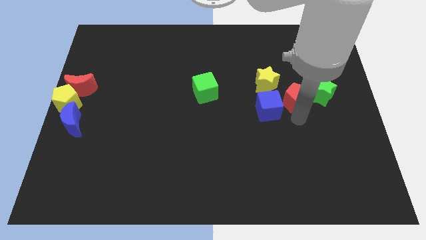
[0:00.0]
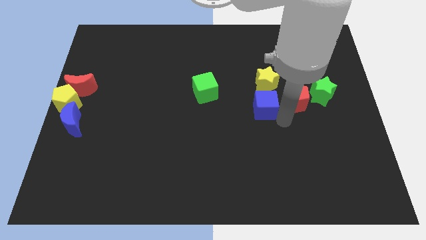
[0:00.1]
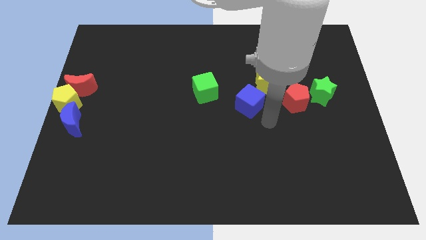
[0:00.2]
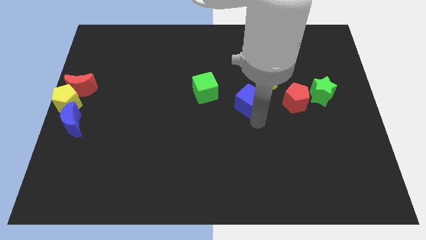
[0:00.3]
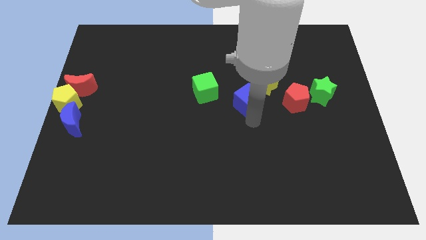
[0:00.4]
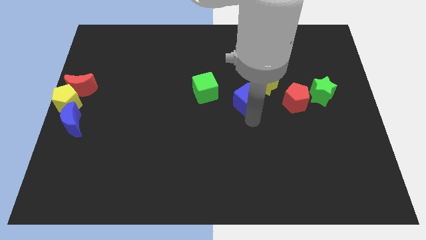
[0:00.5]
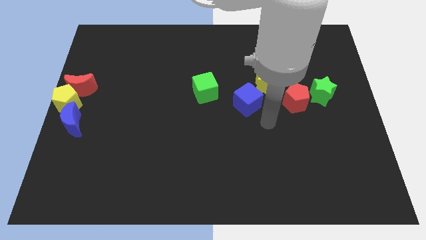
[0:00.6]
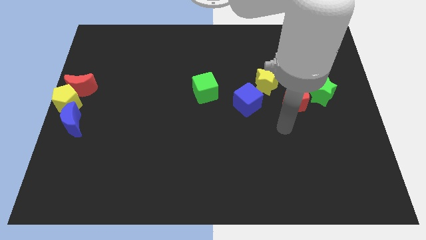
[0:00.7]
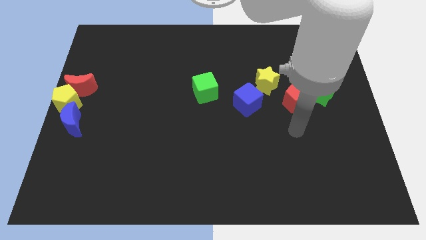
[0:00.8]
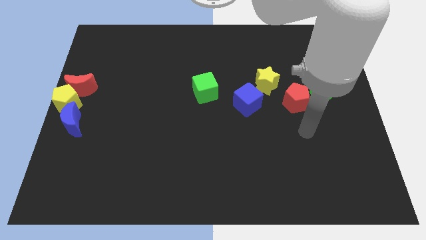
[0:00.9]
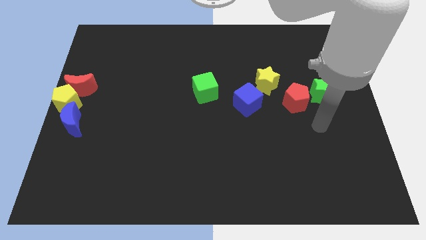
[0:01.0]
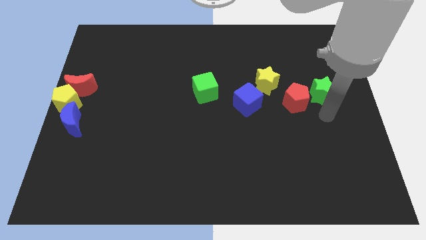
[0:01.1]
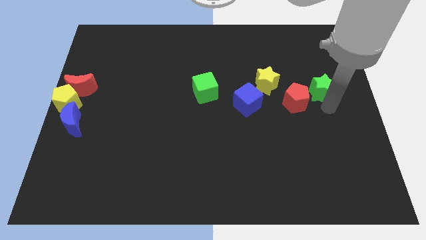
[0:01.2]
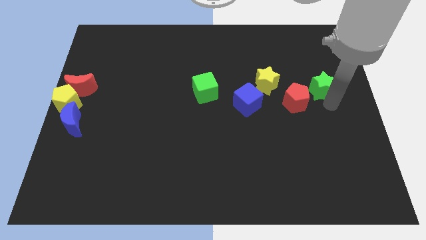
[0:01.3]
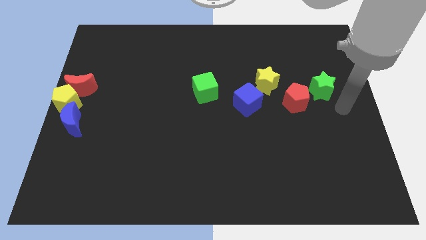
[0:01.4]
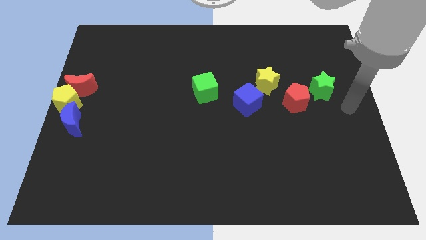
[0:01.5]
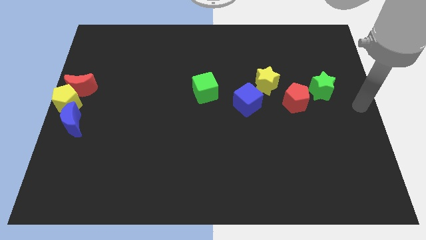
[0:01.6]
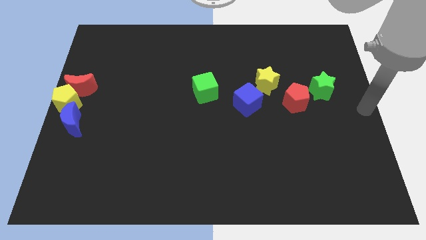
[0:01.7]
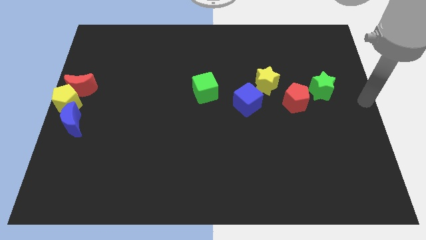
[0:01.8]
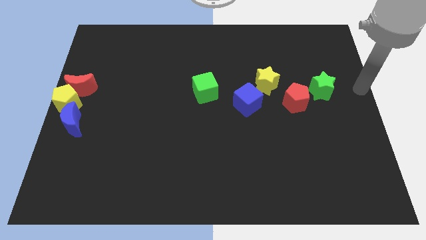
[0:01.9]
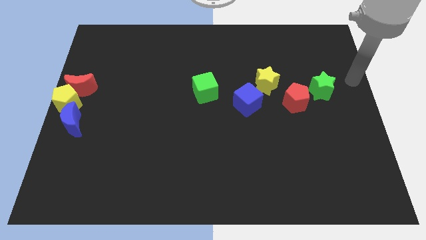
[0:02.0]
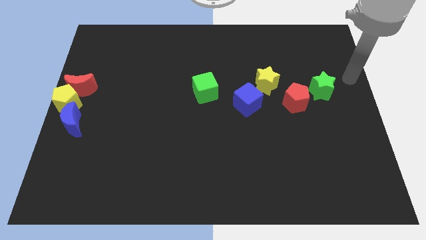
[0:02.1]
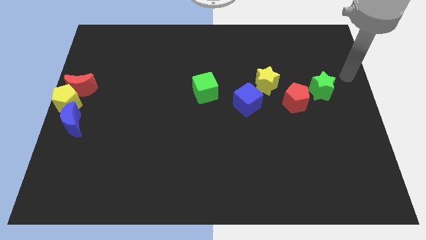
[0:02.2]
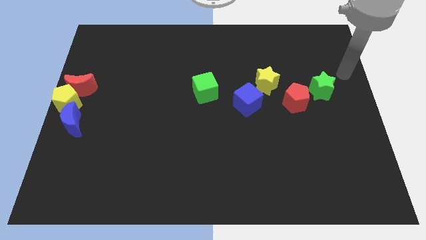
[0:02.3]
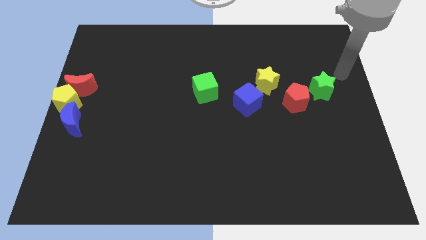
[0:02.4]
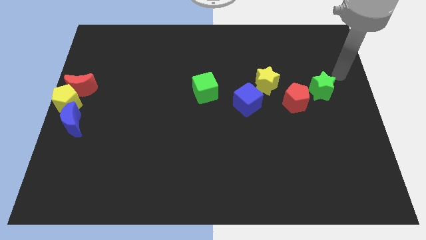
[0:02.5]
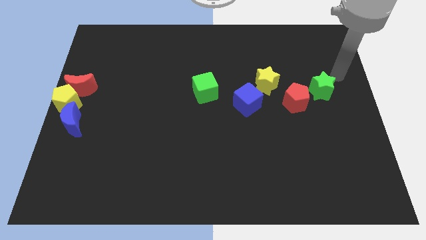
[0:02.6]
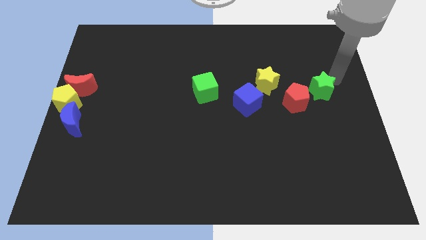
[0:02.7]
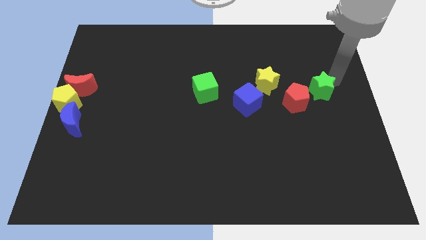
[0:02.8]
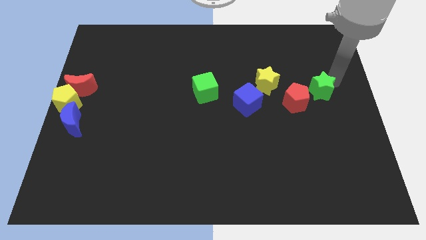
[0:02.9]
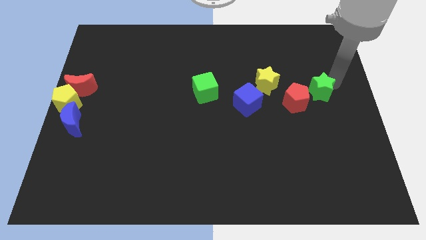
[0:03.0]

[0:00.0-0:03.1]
tap the green star

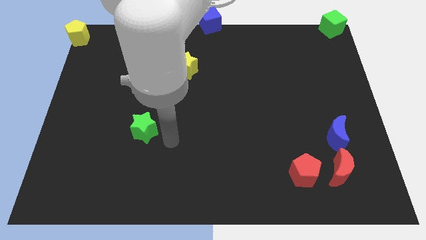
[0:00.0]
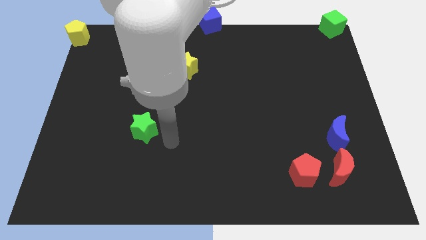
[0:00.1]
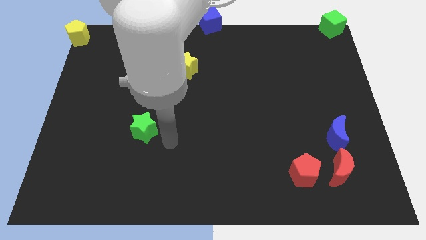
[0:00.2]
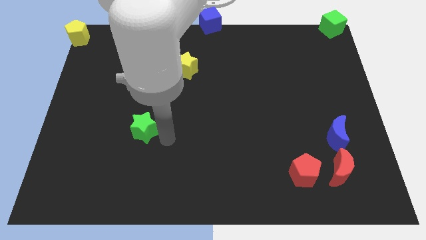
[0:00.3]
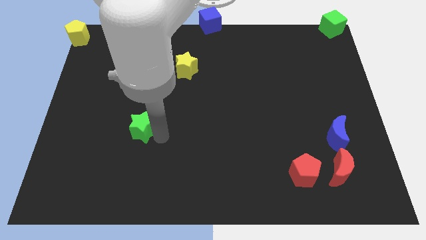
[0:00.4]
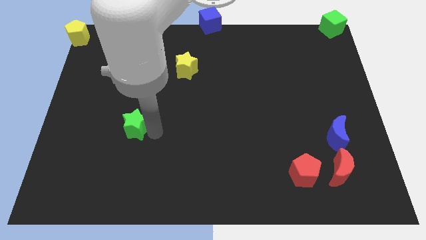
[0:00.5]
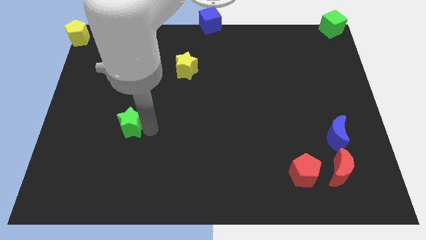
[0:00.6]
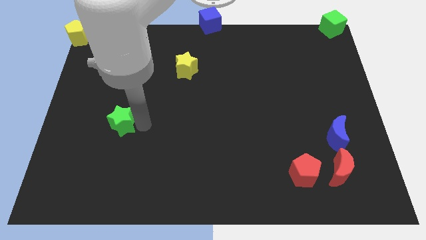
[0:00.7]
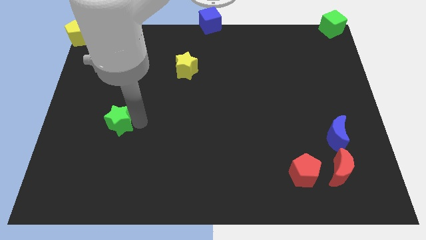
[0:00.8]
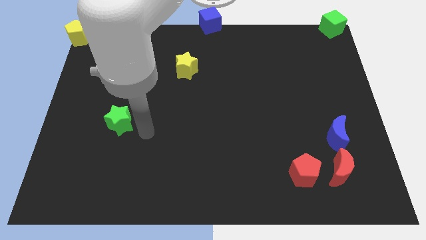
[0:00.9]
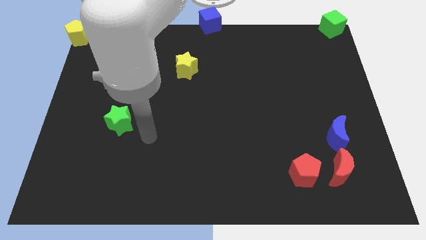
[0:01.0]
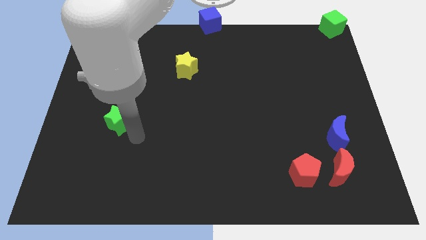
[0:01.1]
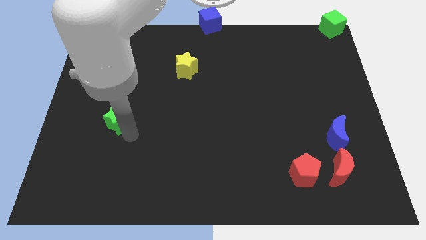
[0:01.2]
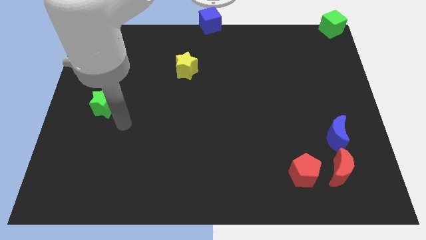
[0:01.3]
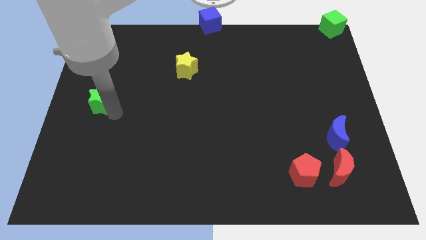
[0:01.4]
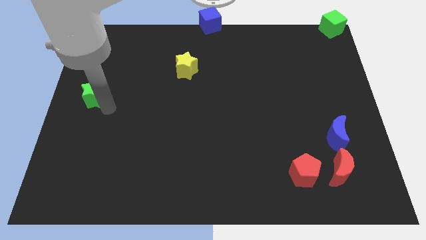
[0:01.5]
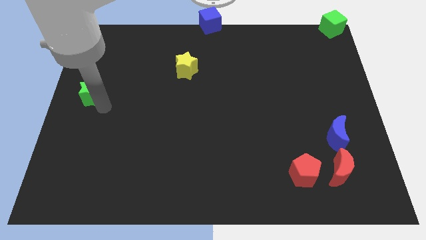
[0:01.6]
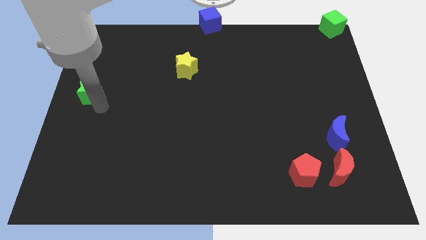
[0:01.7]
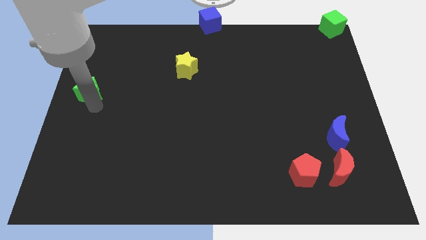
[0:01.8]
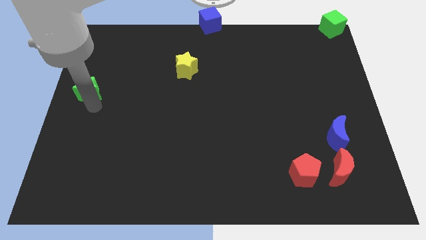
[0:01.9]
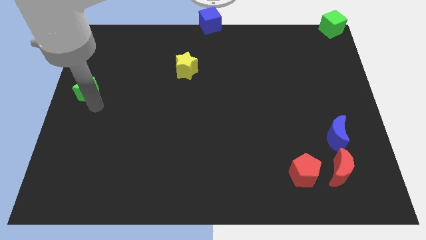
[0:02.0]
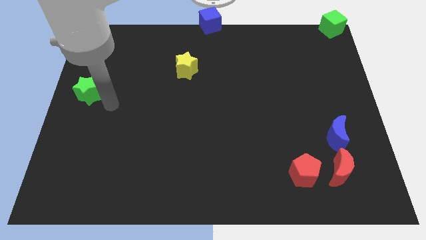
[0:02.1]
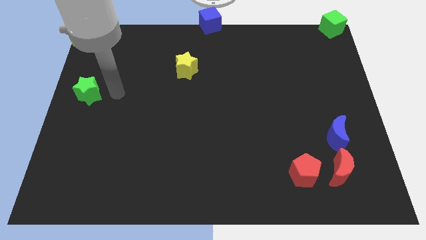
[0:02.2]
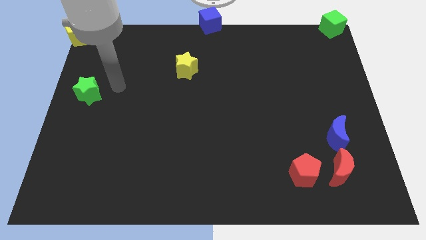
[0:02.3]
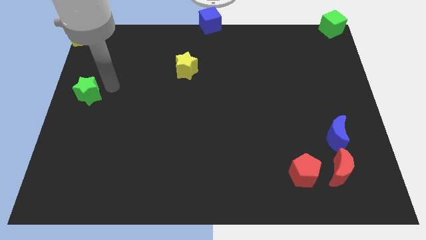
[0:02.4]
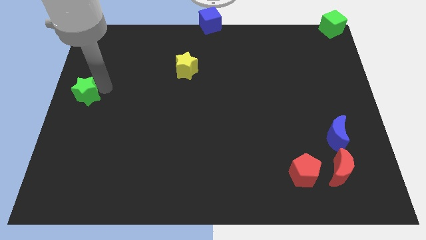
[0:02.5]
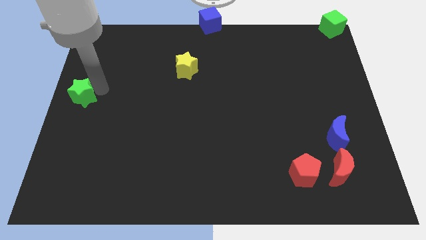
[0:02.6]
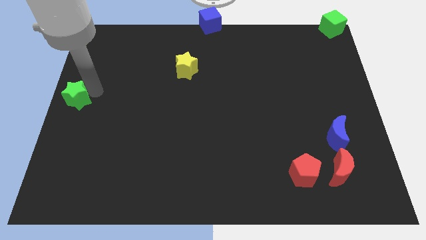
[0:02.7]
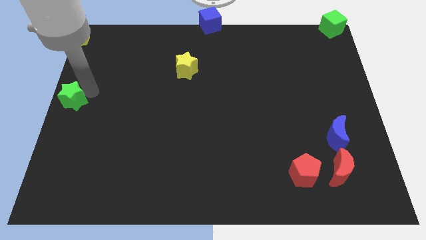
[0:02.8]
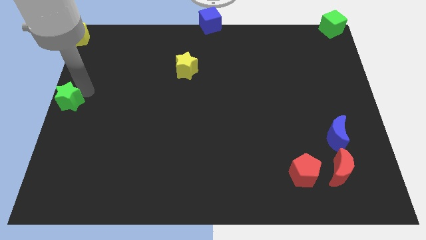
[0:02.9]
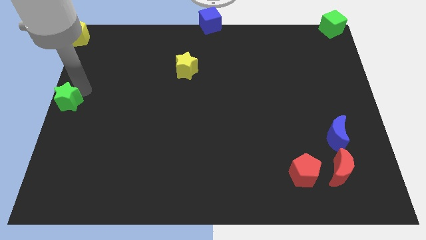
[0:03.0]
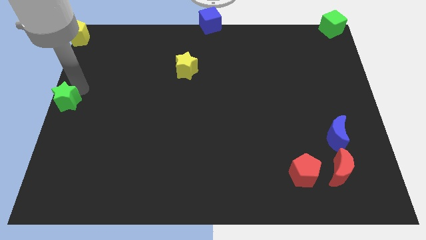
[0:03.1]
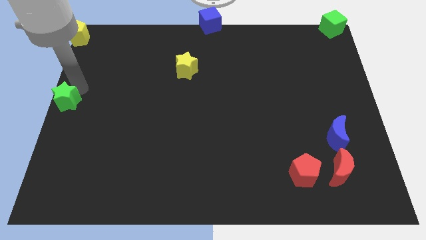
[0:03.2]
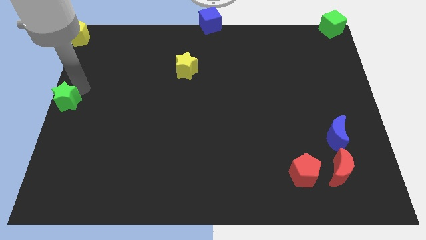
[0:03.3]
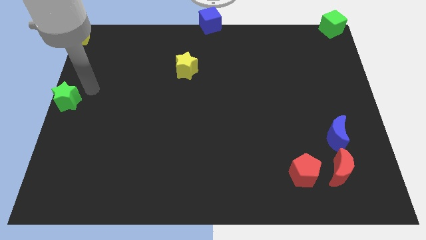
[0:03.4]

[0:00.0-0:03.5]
place green star to the left center of the board

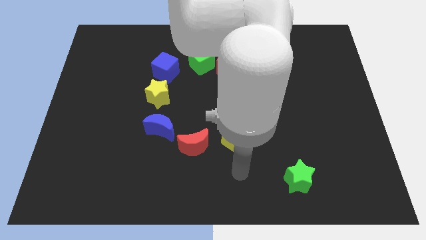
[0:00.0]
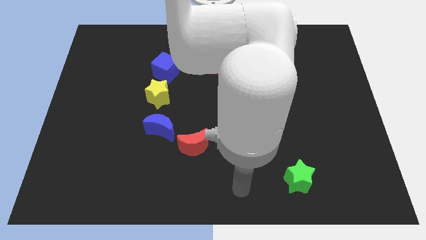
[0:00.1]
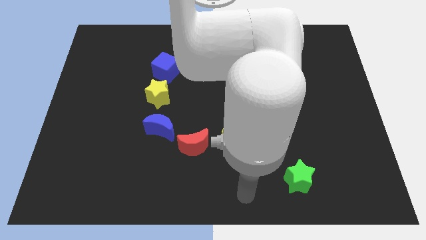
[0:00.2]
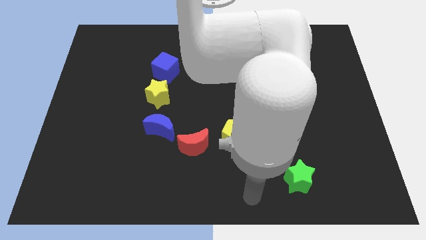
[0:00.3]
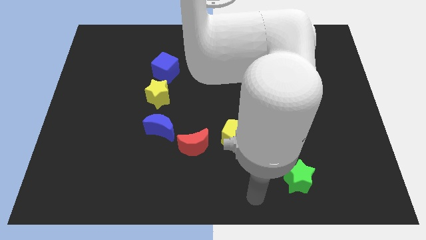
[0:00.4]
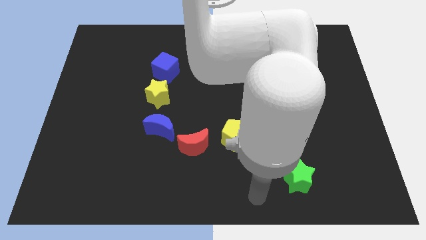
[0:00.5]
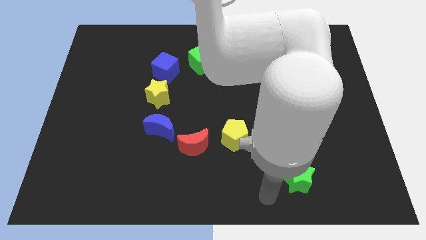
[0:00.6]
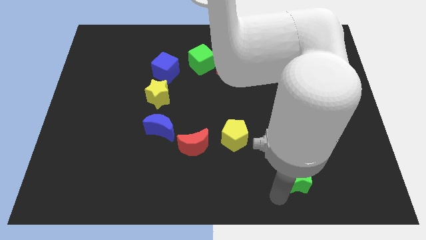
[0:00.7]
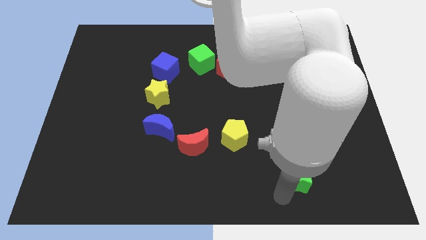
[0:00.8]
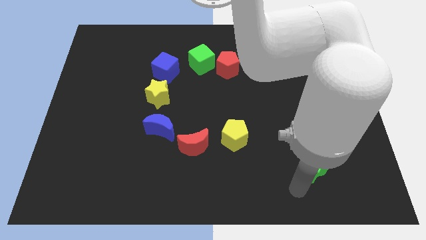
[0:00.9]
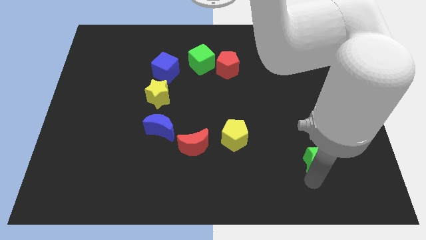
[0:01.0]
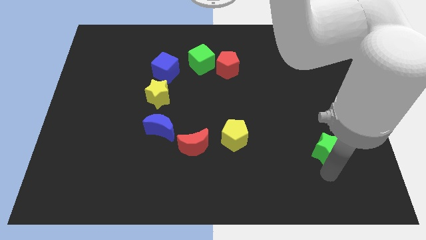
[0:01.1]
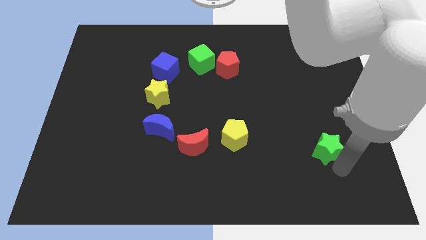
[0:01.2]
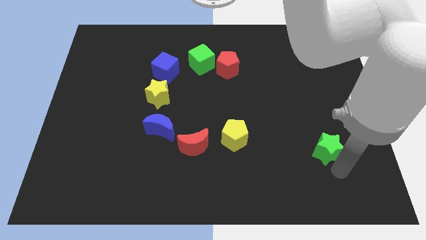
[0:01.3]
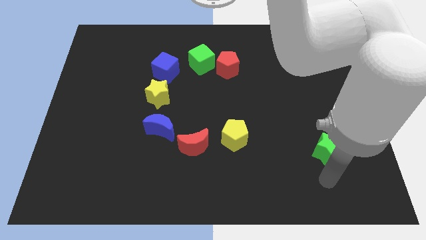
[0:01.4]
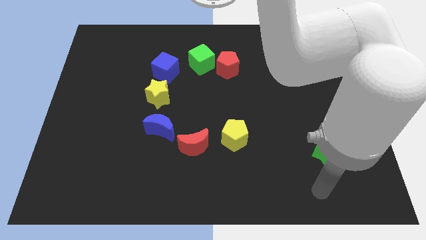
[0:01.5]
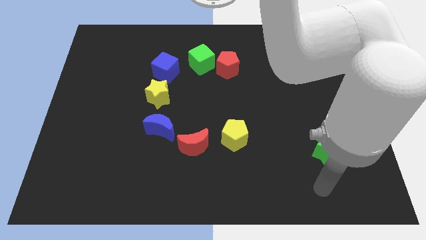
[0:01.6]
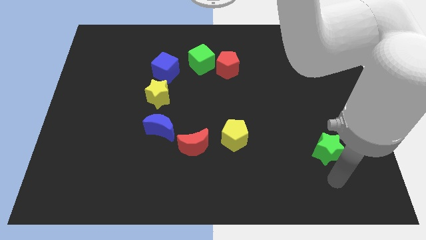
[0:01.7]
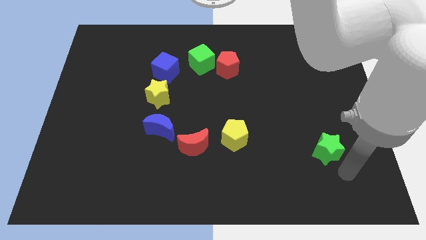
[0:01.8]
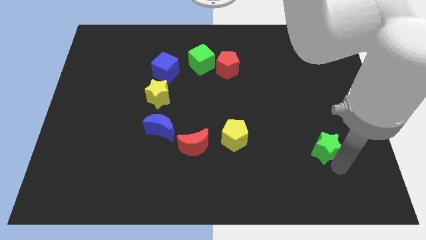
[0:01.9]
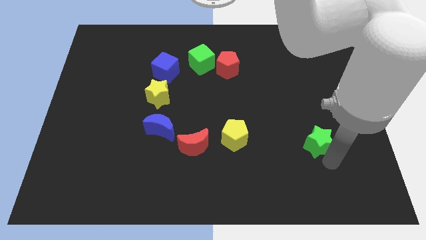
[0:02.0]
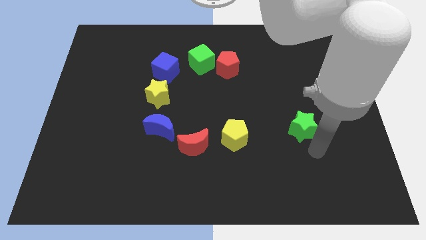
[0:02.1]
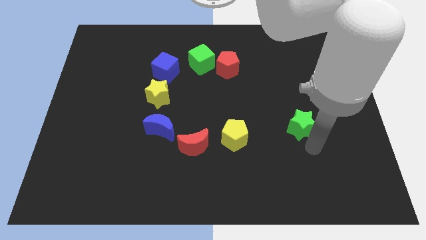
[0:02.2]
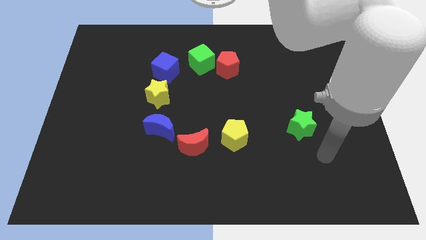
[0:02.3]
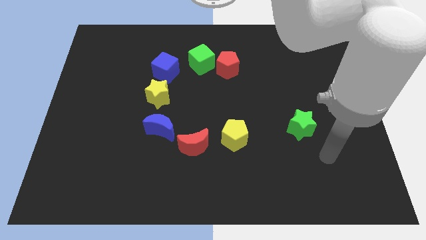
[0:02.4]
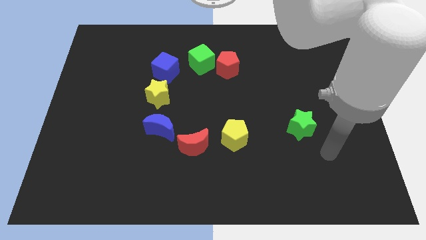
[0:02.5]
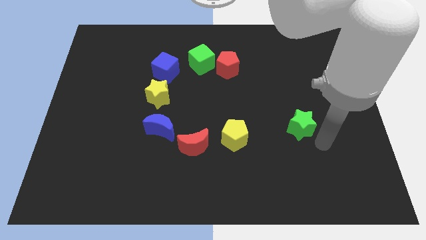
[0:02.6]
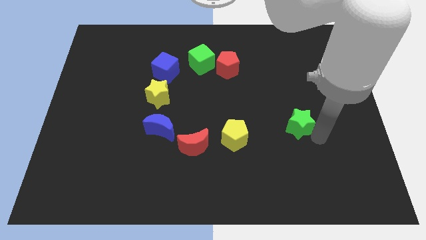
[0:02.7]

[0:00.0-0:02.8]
place the green star at right side of the yellow pentagon
